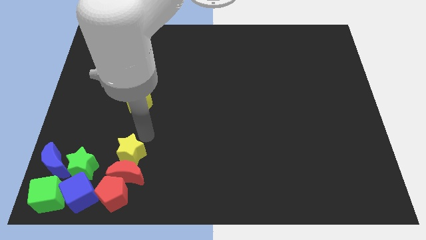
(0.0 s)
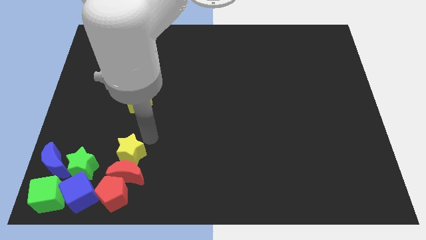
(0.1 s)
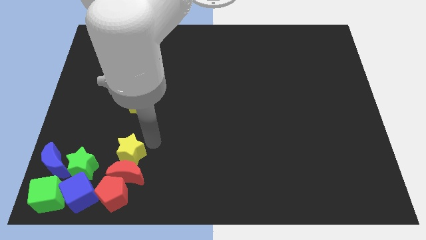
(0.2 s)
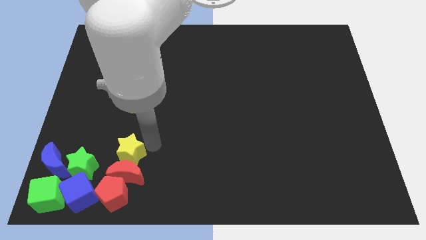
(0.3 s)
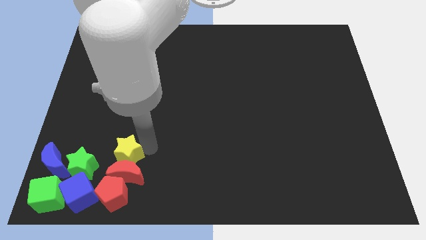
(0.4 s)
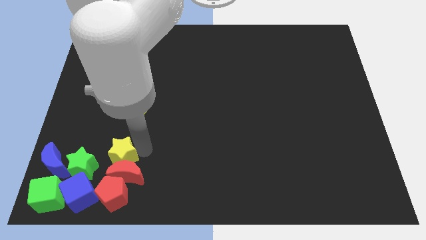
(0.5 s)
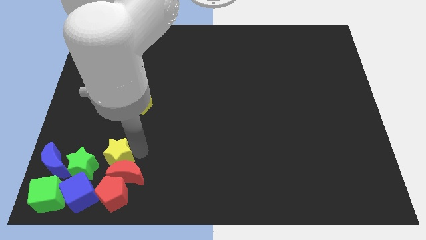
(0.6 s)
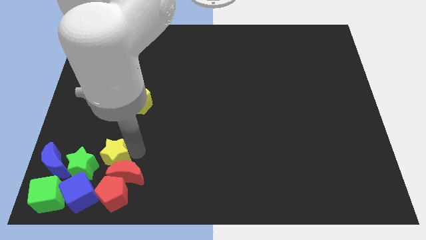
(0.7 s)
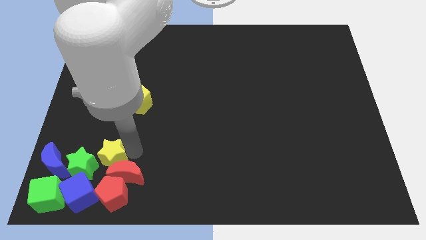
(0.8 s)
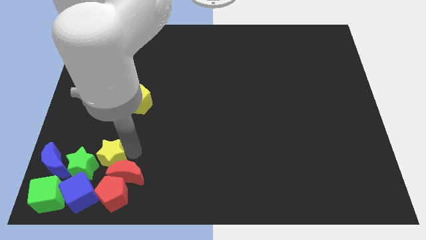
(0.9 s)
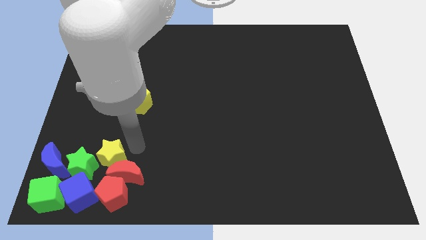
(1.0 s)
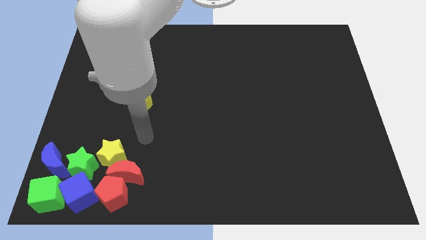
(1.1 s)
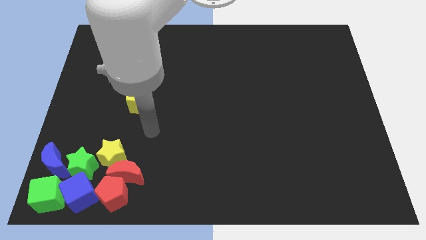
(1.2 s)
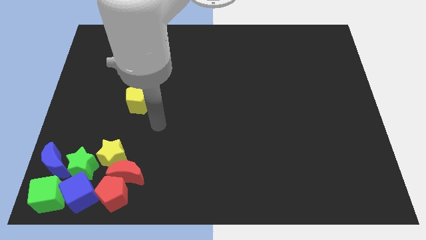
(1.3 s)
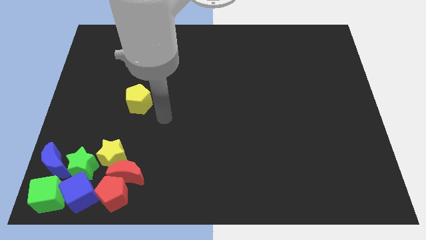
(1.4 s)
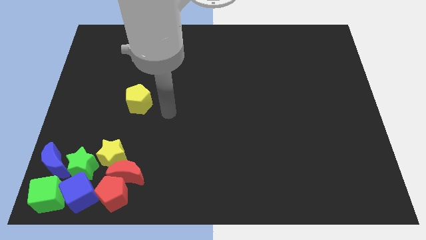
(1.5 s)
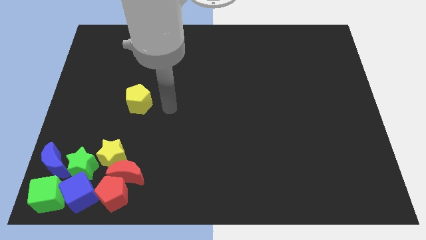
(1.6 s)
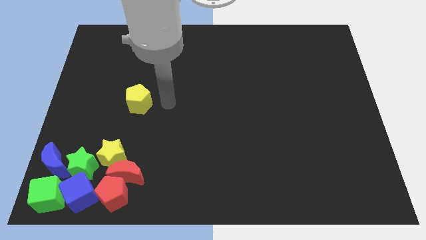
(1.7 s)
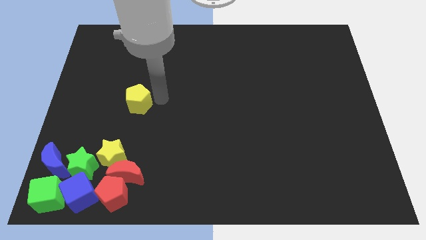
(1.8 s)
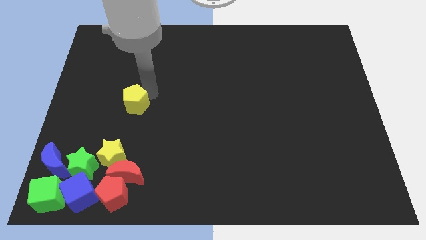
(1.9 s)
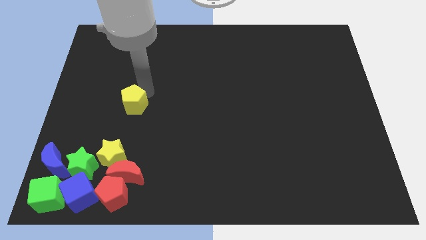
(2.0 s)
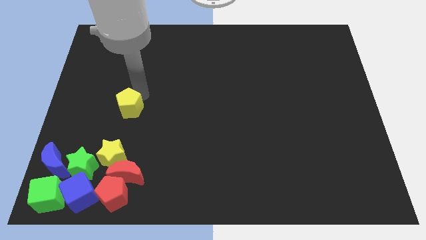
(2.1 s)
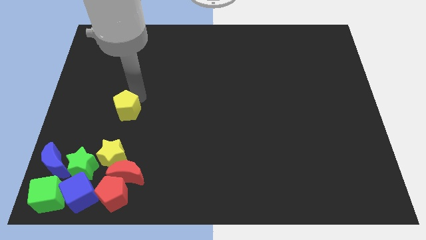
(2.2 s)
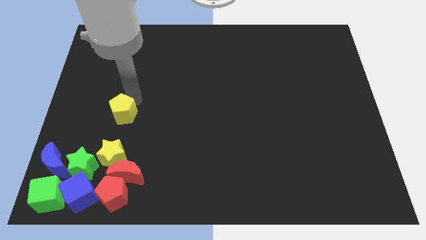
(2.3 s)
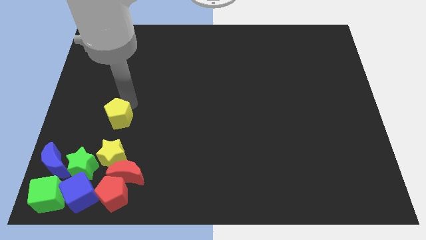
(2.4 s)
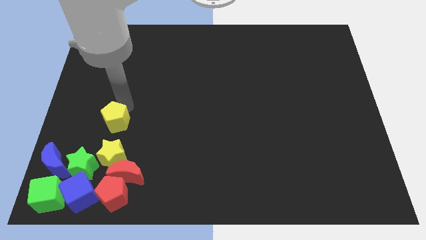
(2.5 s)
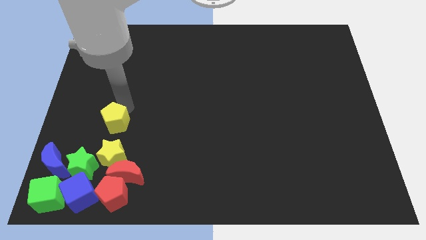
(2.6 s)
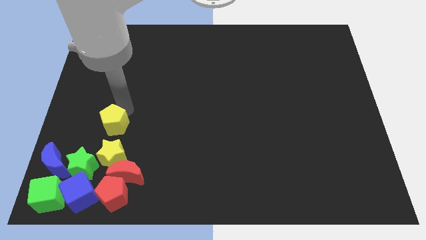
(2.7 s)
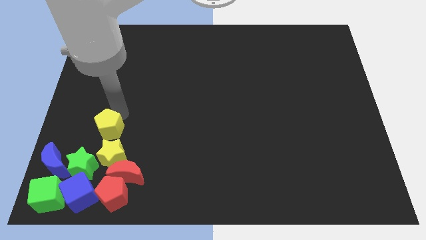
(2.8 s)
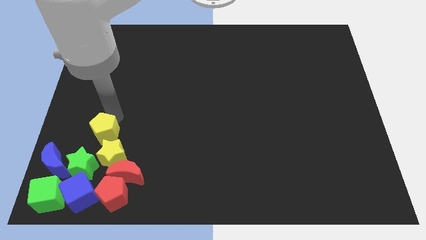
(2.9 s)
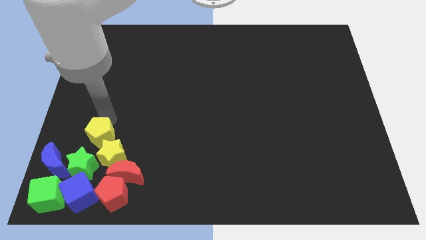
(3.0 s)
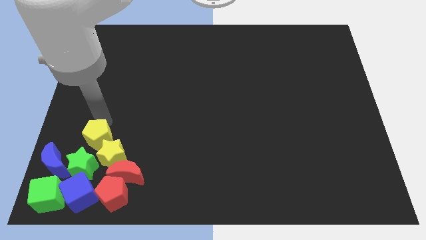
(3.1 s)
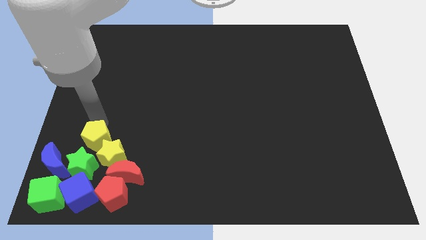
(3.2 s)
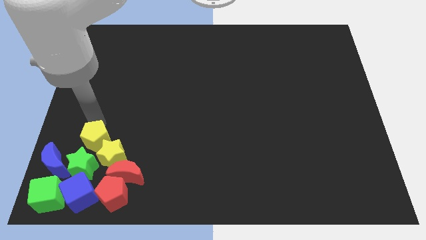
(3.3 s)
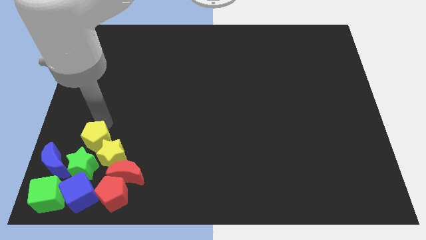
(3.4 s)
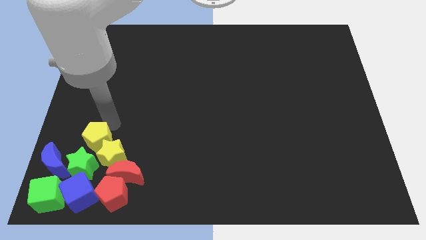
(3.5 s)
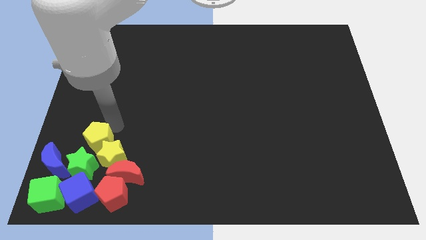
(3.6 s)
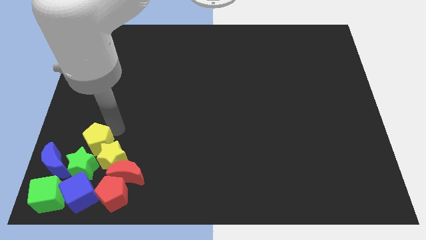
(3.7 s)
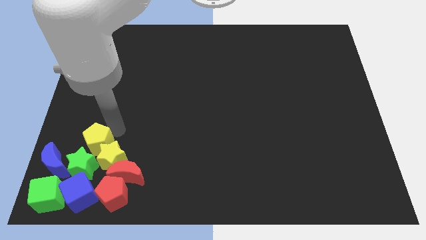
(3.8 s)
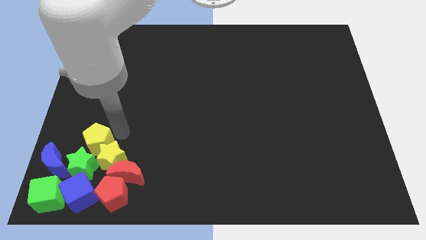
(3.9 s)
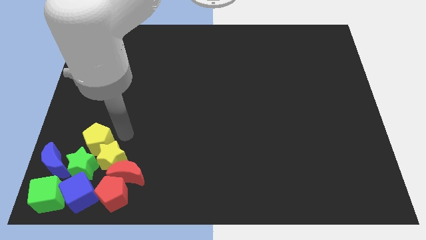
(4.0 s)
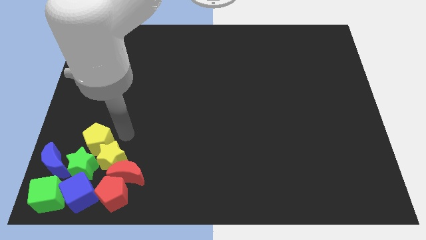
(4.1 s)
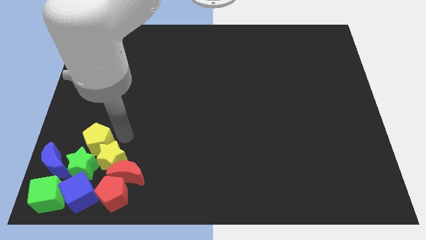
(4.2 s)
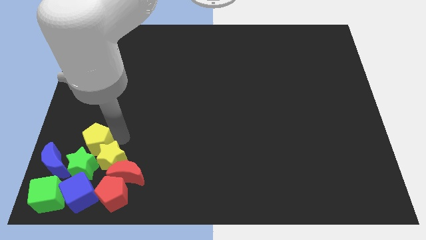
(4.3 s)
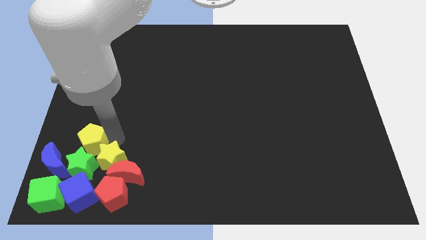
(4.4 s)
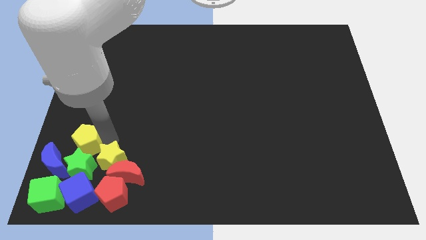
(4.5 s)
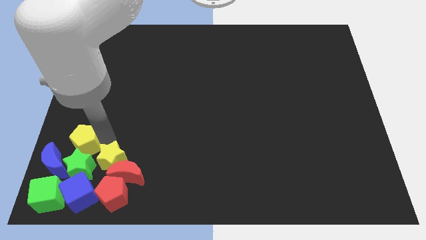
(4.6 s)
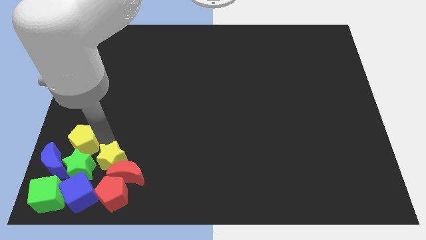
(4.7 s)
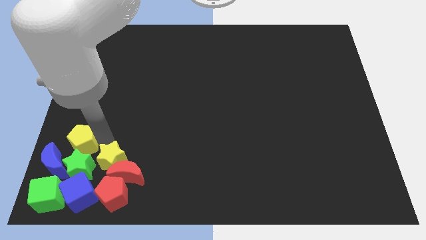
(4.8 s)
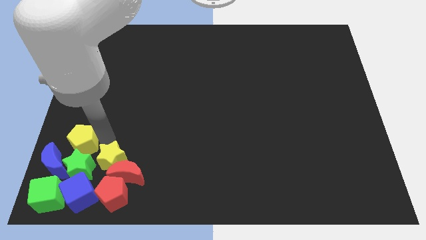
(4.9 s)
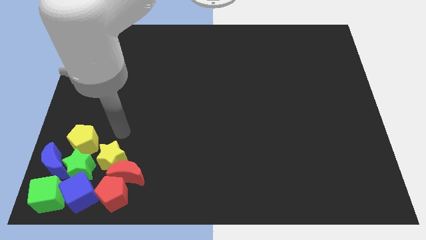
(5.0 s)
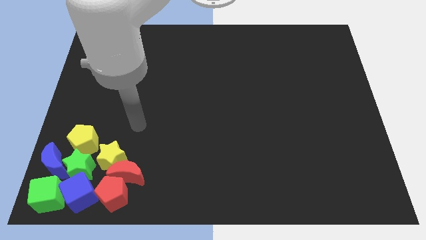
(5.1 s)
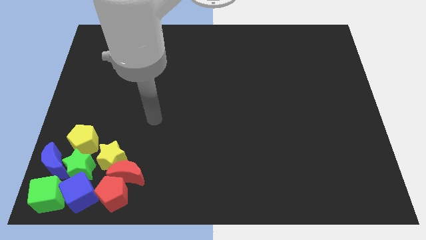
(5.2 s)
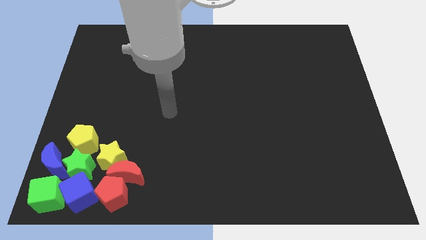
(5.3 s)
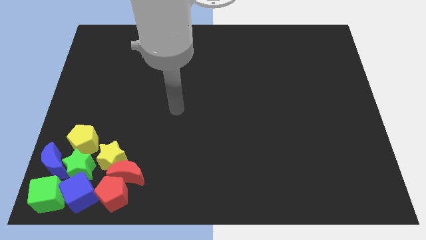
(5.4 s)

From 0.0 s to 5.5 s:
push the yellow blocks diagonal to each other

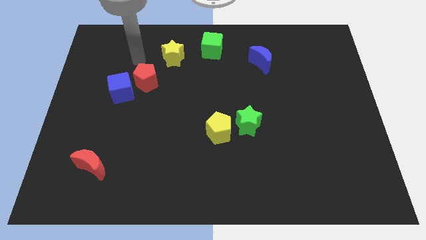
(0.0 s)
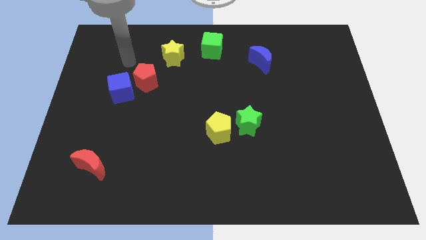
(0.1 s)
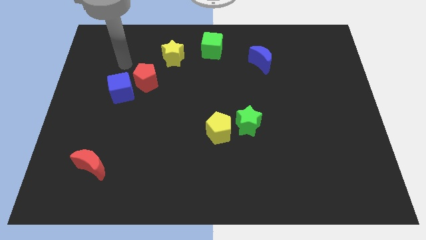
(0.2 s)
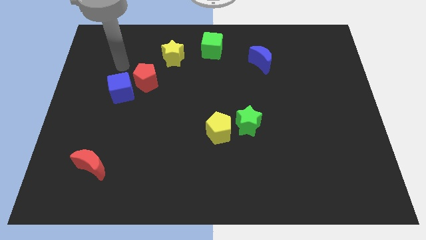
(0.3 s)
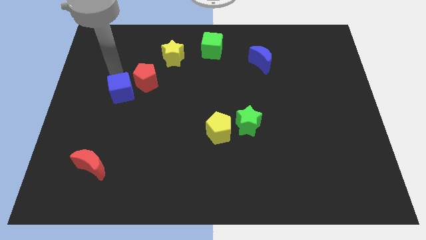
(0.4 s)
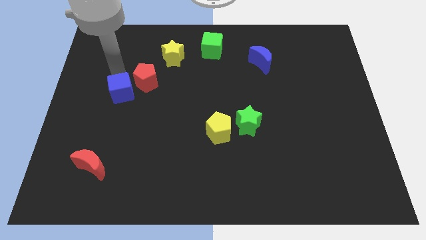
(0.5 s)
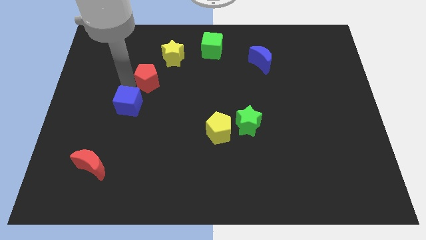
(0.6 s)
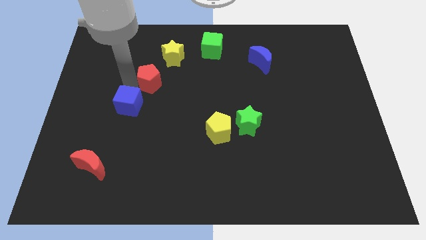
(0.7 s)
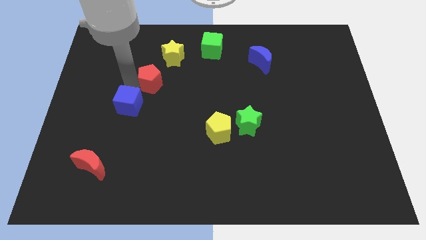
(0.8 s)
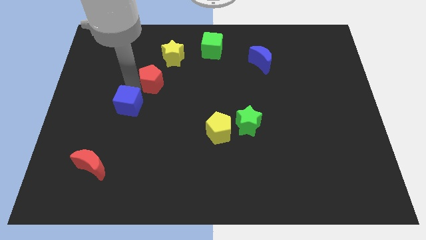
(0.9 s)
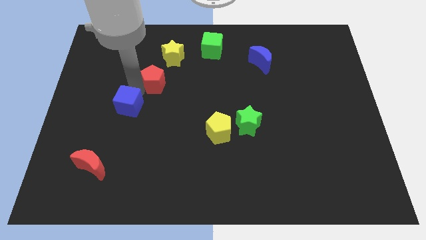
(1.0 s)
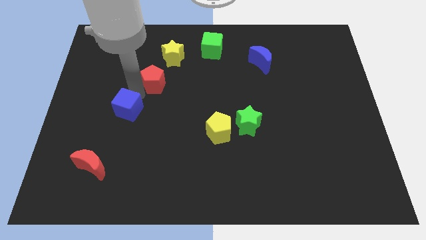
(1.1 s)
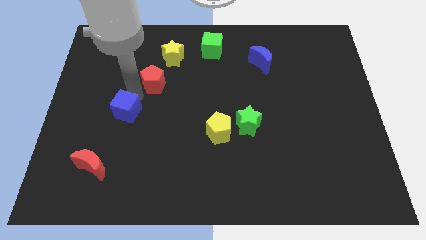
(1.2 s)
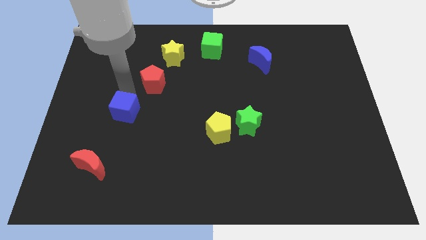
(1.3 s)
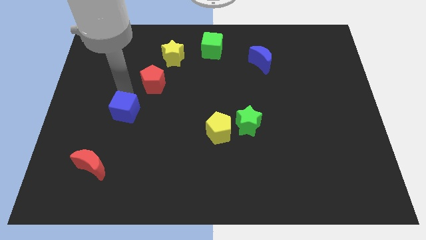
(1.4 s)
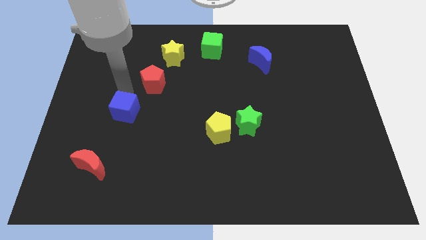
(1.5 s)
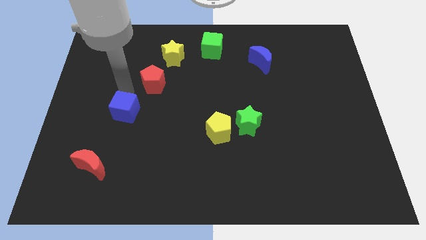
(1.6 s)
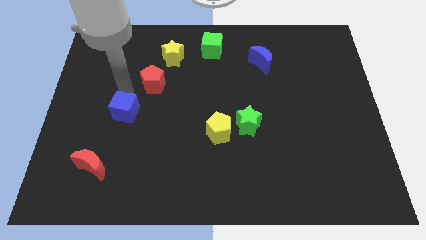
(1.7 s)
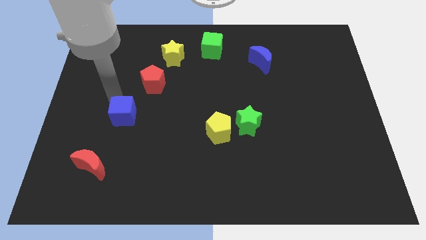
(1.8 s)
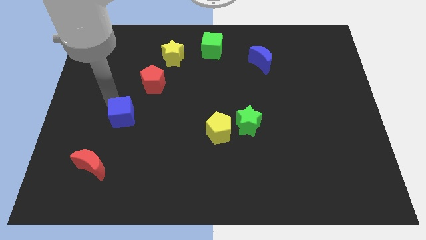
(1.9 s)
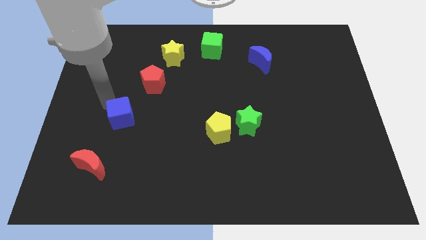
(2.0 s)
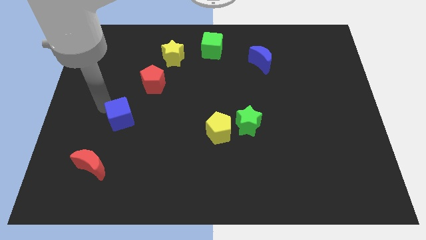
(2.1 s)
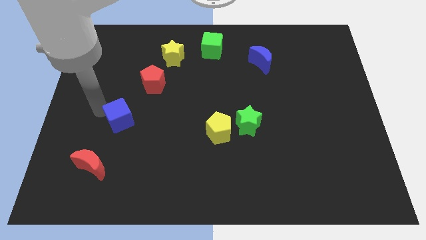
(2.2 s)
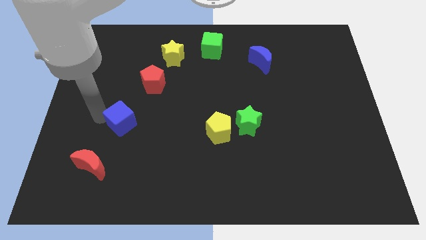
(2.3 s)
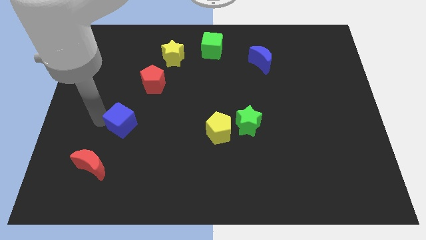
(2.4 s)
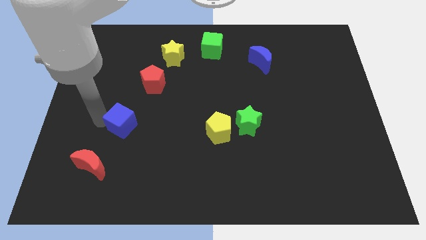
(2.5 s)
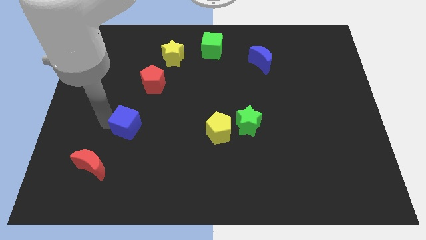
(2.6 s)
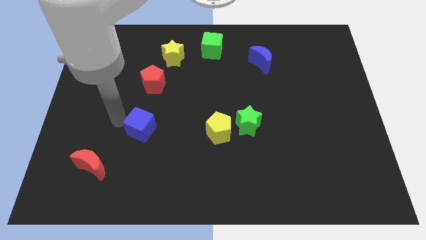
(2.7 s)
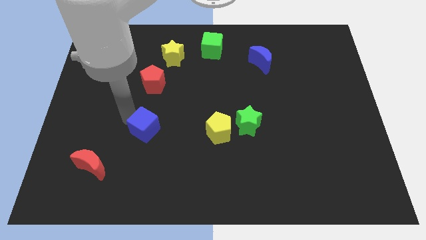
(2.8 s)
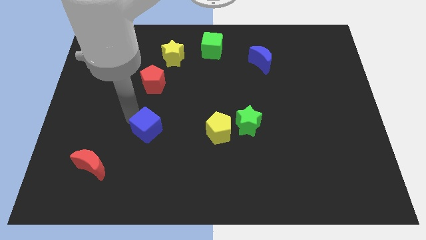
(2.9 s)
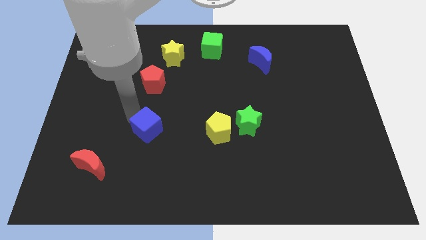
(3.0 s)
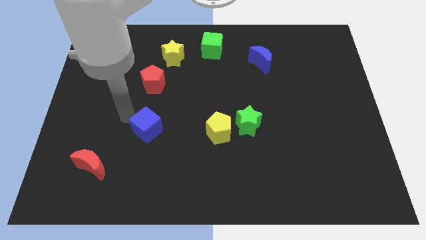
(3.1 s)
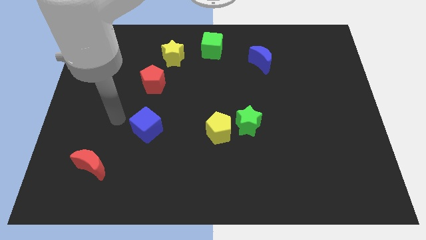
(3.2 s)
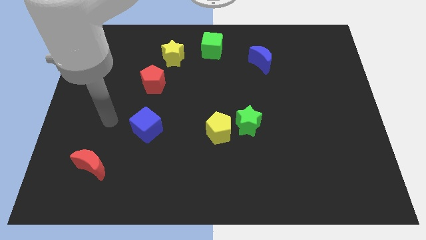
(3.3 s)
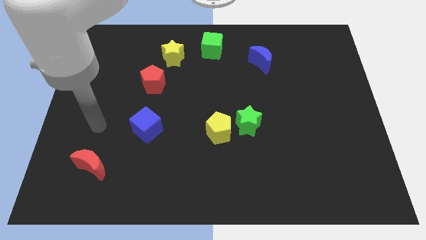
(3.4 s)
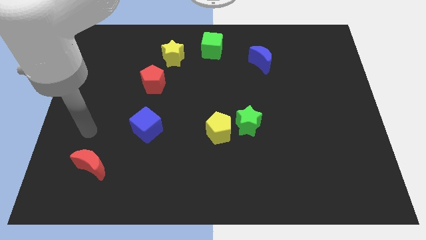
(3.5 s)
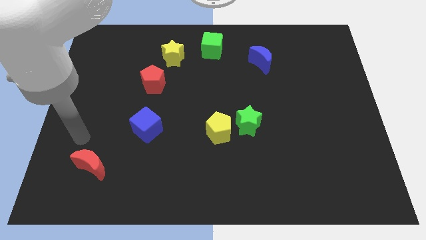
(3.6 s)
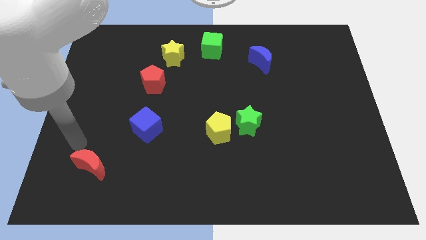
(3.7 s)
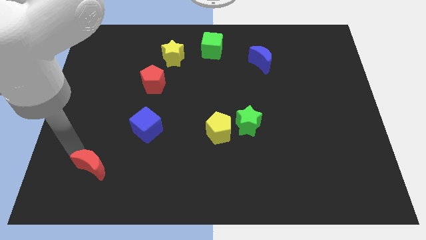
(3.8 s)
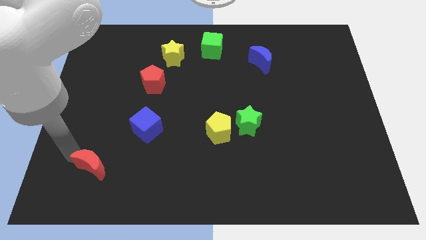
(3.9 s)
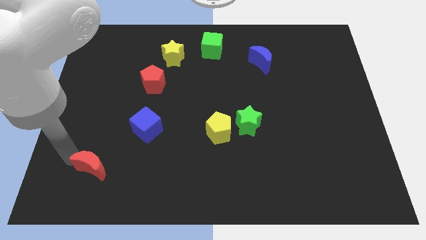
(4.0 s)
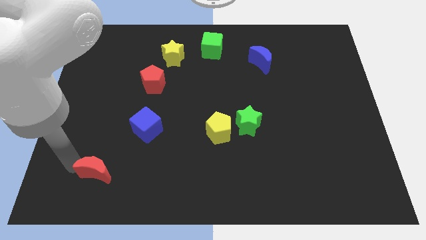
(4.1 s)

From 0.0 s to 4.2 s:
move the blue cube to the left of the yellow pentagon
